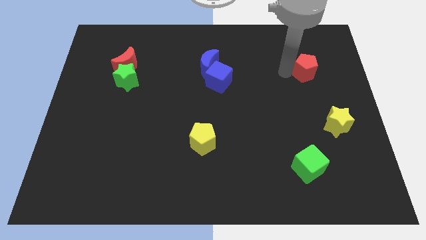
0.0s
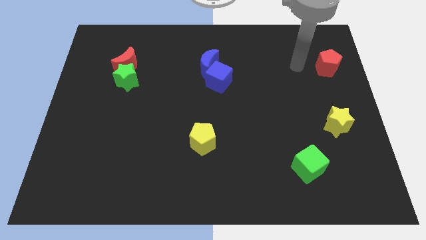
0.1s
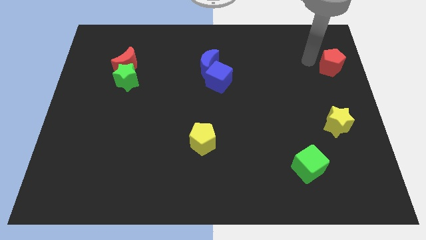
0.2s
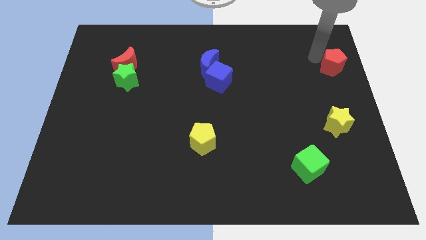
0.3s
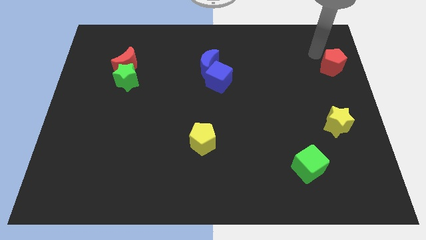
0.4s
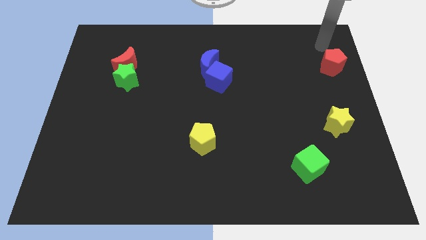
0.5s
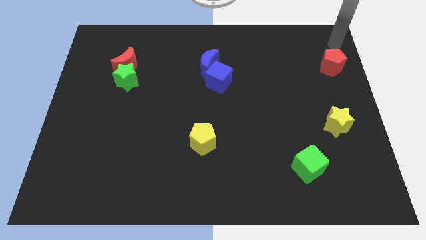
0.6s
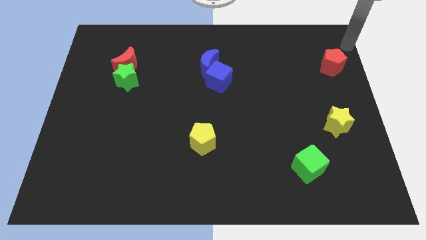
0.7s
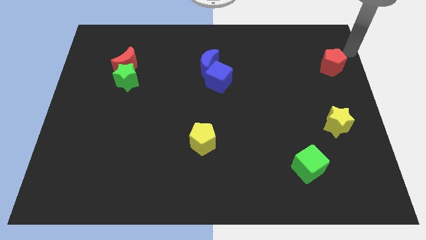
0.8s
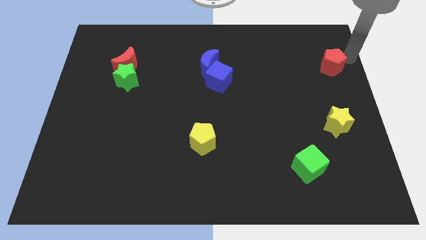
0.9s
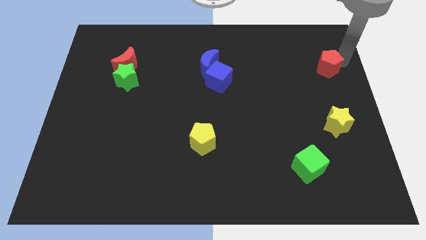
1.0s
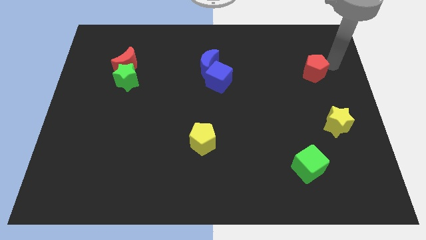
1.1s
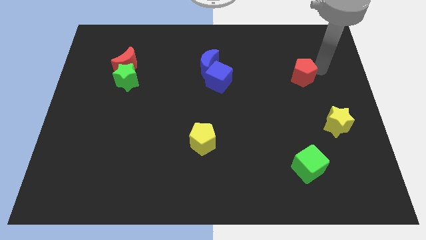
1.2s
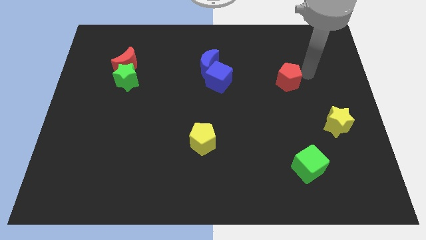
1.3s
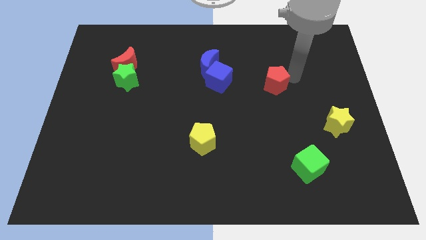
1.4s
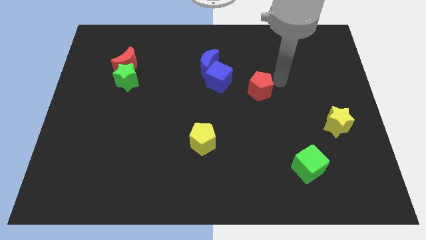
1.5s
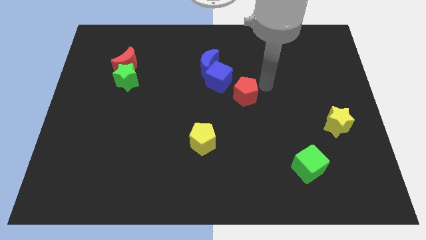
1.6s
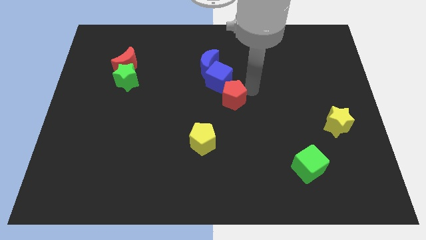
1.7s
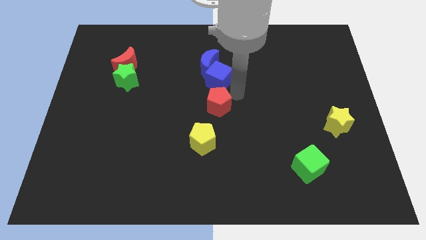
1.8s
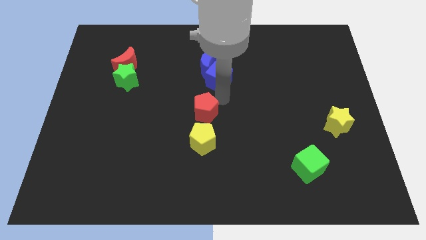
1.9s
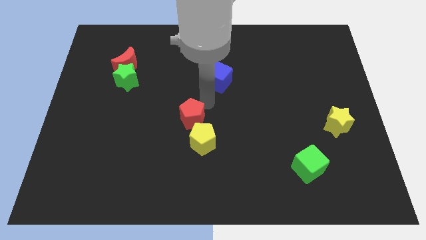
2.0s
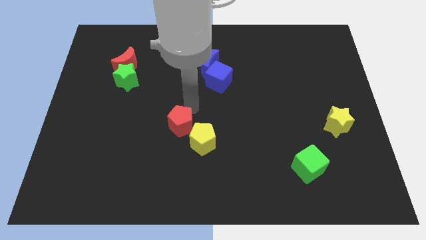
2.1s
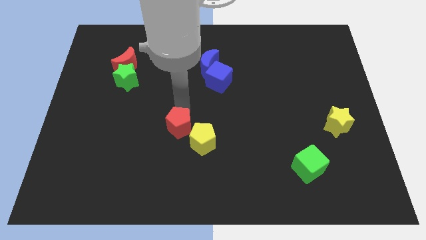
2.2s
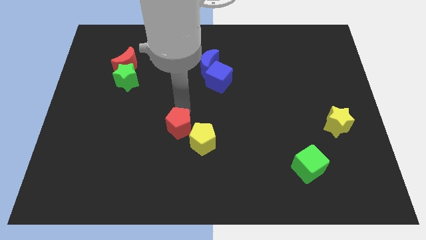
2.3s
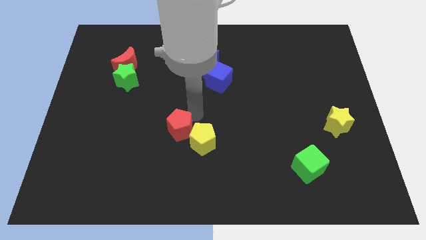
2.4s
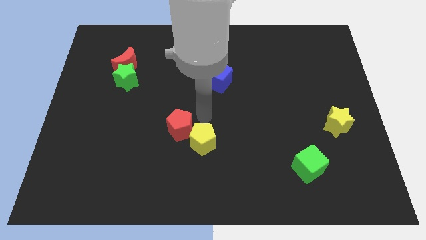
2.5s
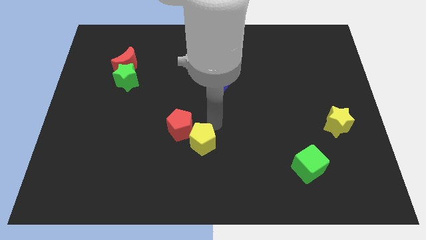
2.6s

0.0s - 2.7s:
place the red pentagon top left to the yellow pentagon

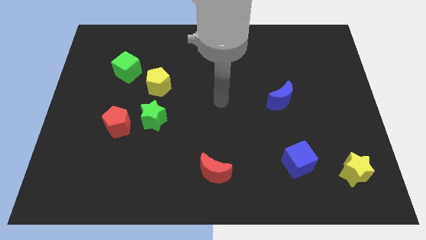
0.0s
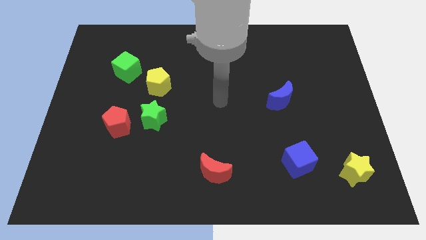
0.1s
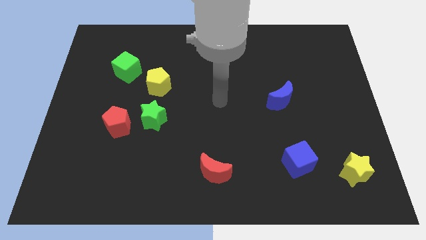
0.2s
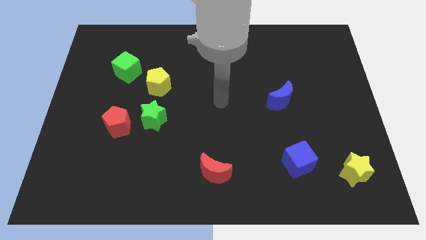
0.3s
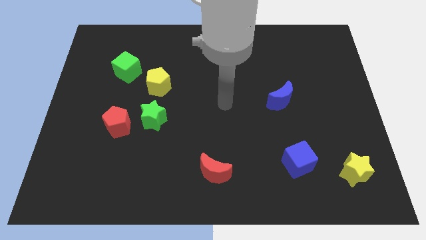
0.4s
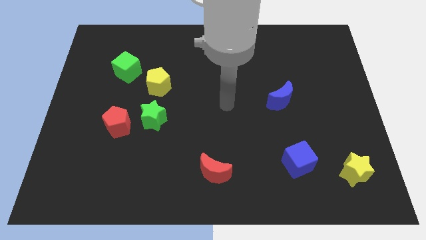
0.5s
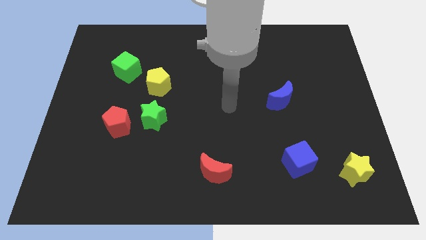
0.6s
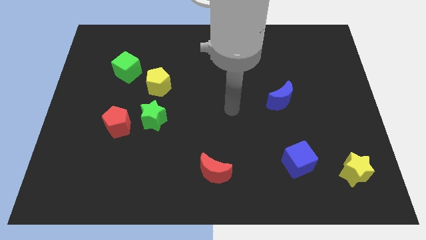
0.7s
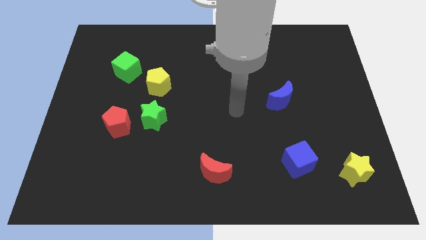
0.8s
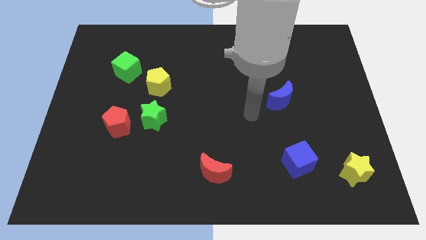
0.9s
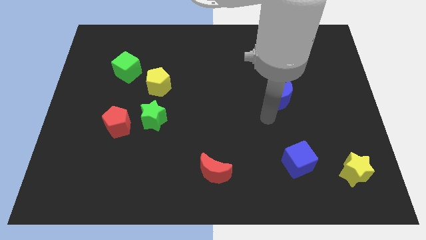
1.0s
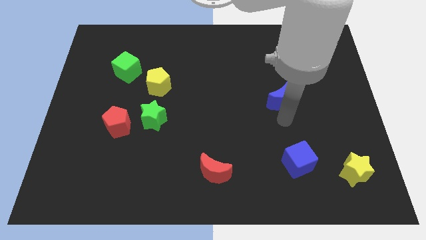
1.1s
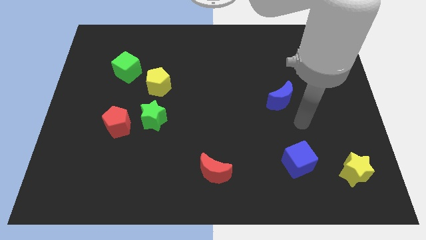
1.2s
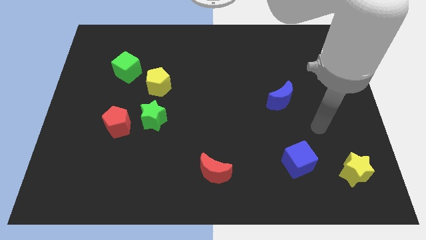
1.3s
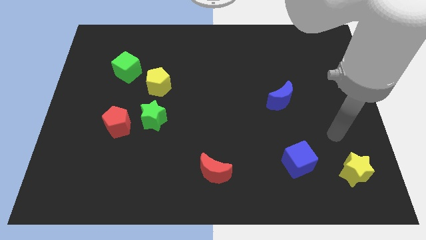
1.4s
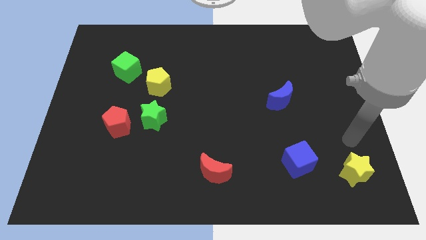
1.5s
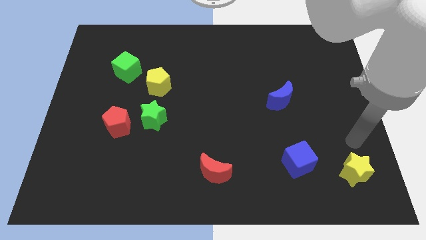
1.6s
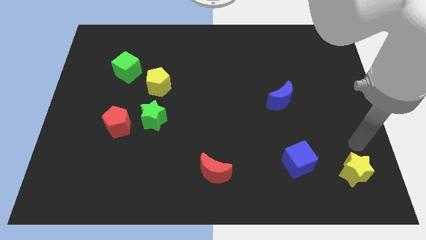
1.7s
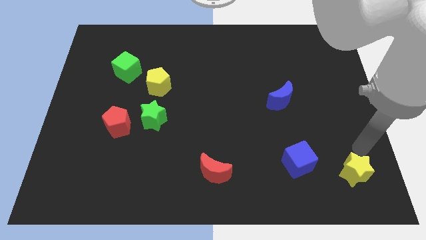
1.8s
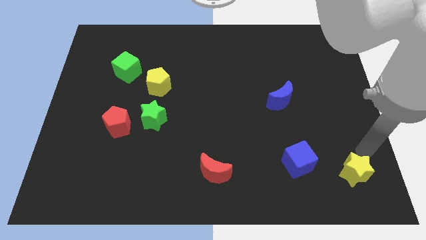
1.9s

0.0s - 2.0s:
move your arm to the top of the yellow star

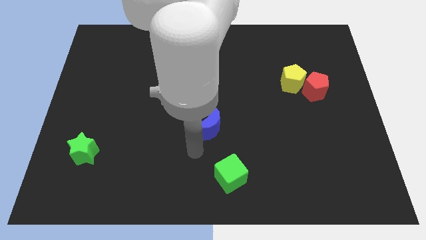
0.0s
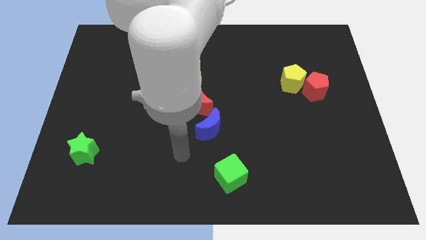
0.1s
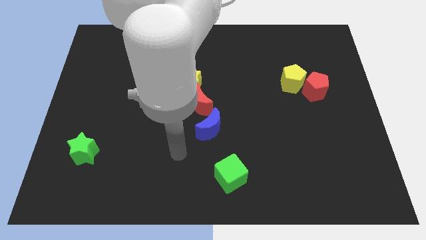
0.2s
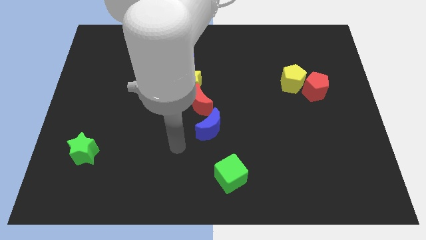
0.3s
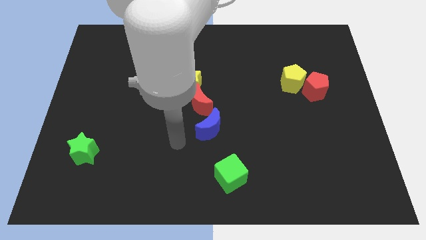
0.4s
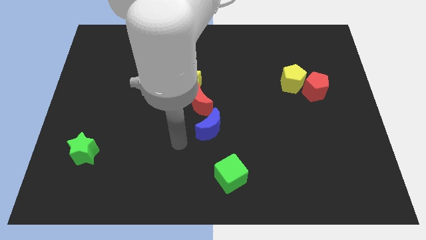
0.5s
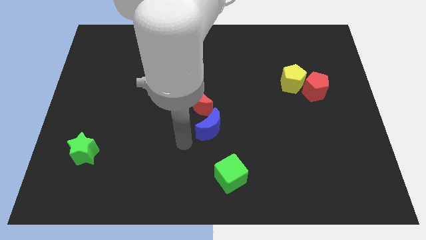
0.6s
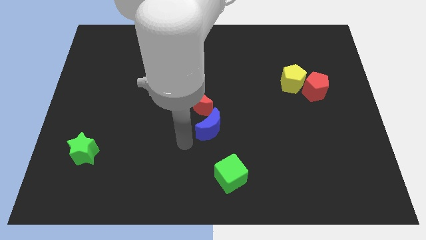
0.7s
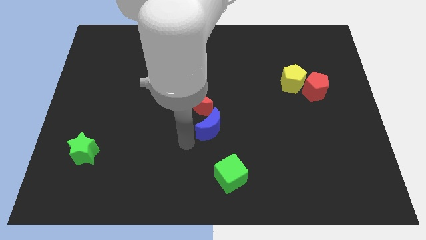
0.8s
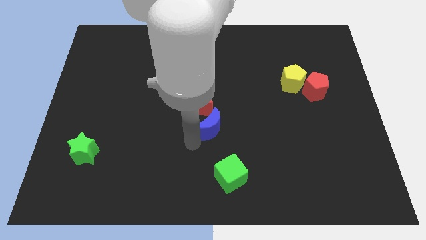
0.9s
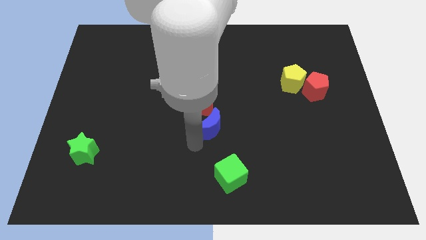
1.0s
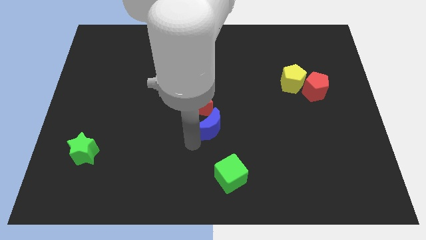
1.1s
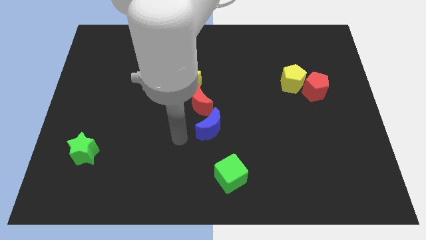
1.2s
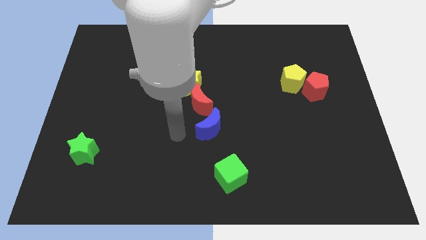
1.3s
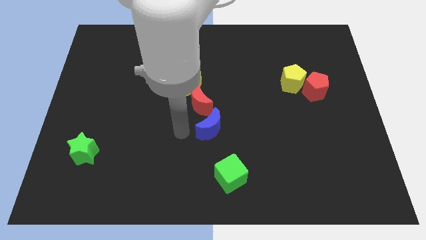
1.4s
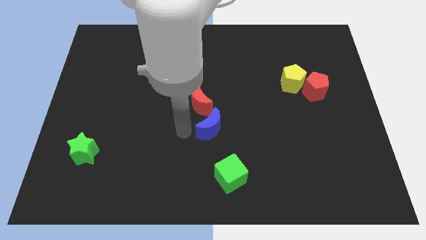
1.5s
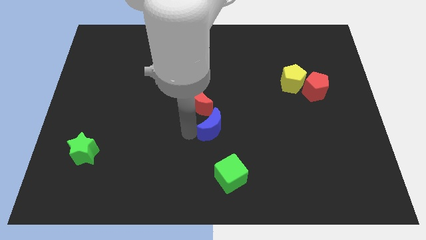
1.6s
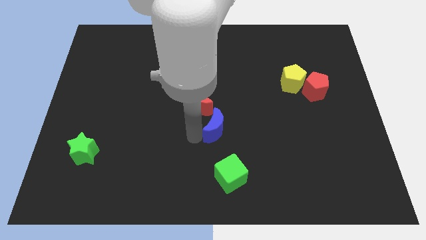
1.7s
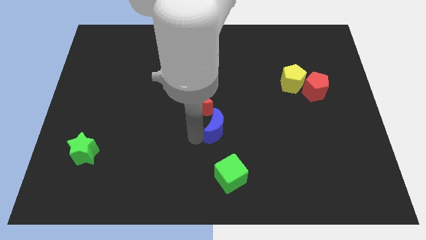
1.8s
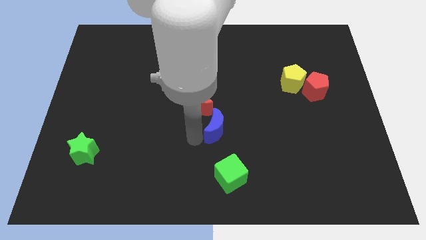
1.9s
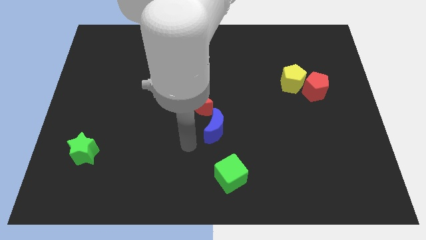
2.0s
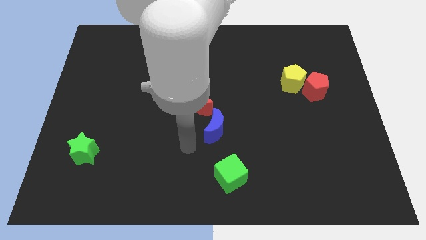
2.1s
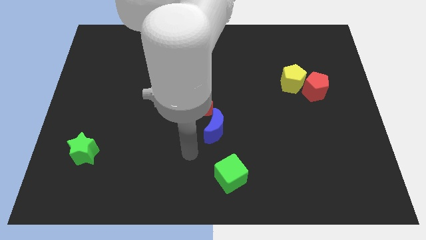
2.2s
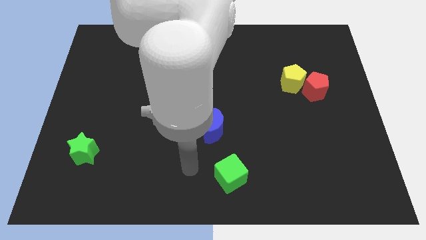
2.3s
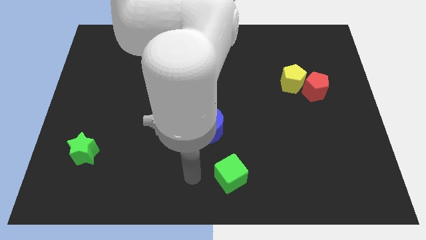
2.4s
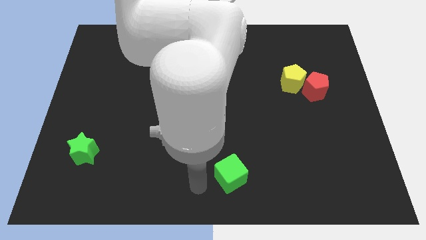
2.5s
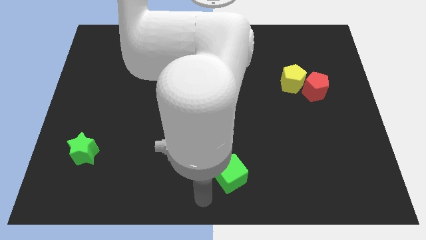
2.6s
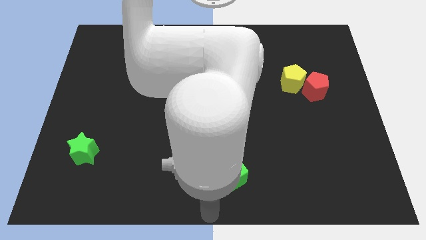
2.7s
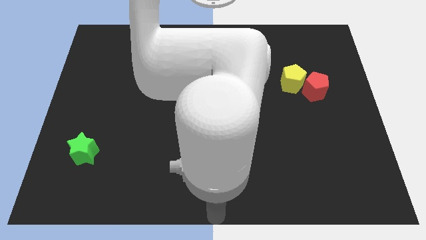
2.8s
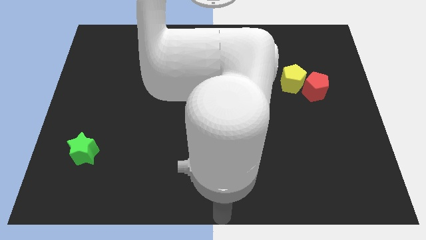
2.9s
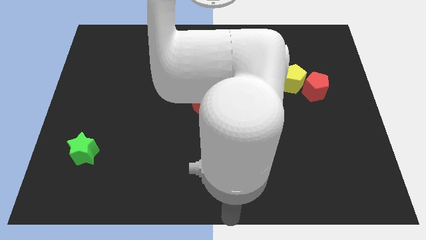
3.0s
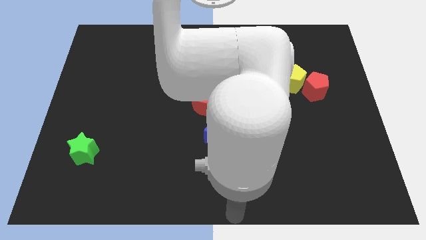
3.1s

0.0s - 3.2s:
place your arm down to the green cube

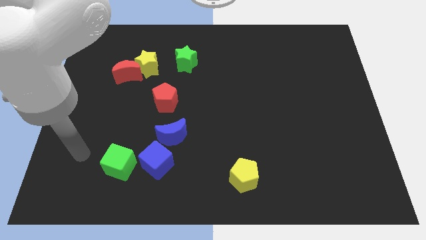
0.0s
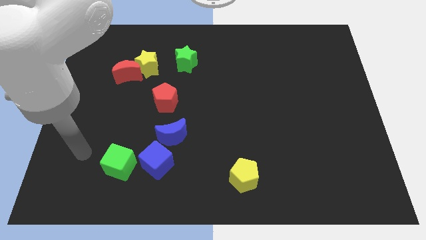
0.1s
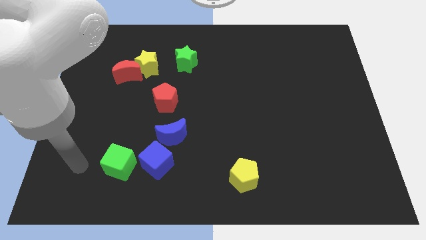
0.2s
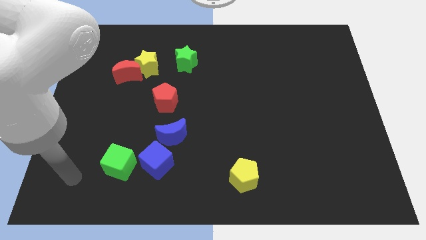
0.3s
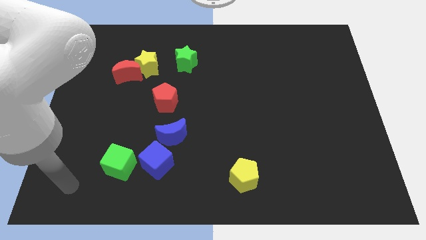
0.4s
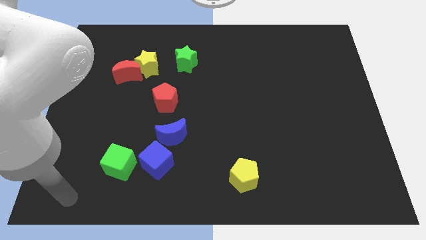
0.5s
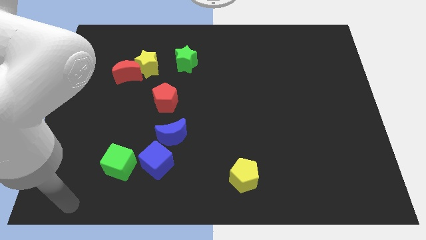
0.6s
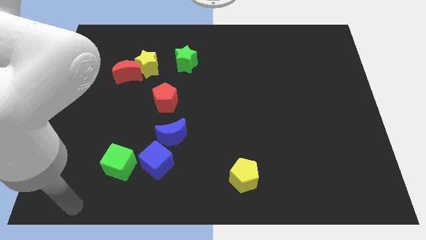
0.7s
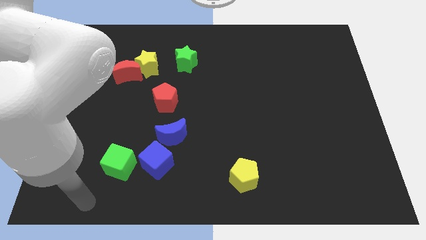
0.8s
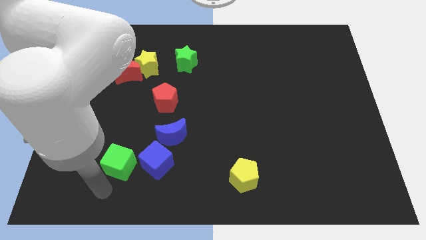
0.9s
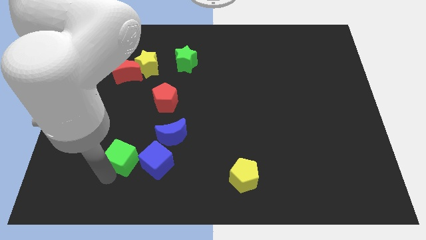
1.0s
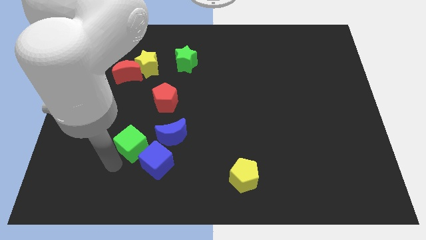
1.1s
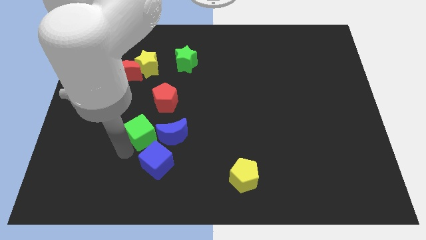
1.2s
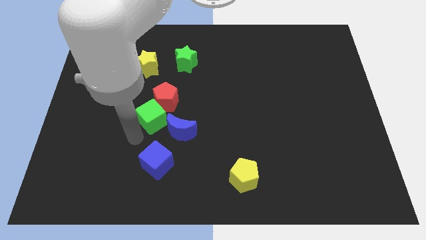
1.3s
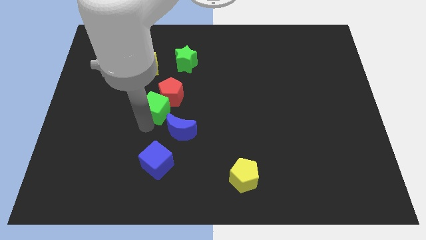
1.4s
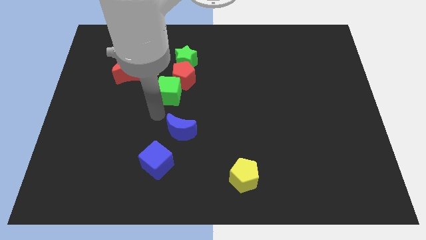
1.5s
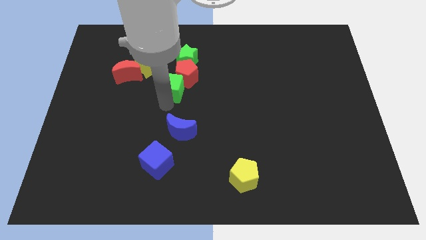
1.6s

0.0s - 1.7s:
push the green cube into the red pentagon
